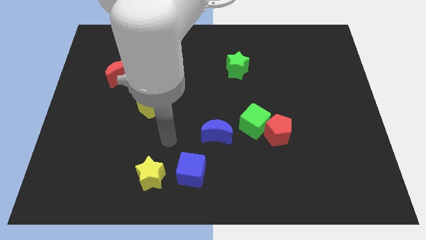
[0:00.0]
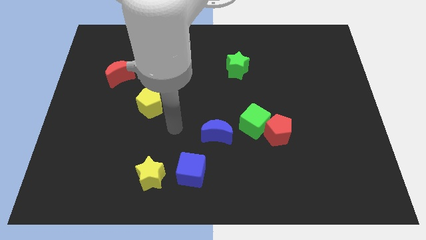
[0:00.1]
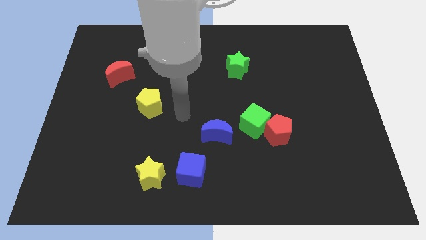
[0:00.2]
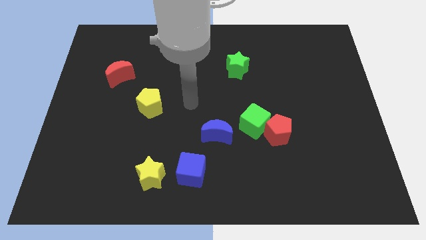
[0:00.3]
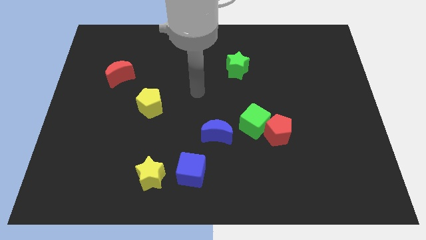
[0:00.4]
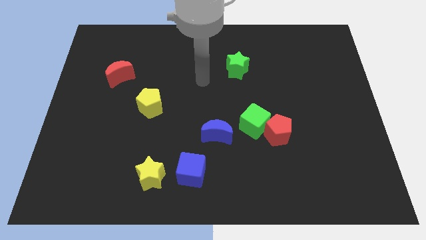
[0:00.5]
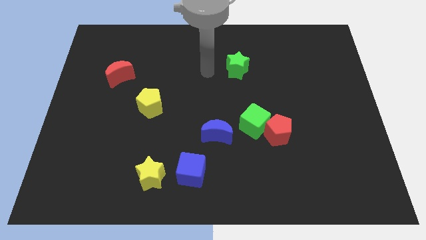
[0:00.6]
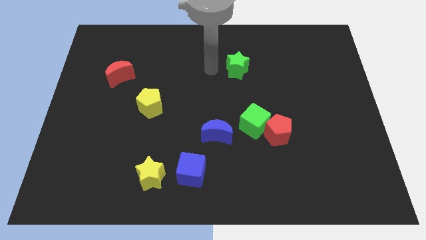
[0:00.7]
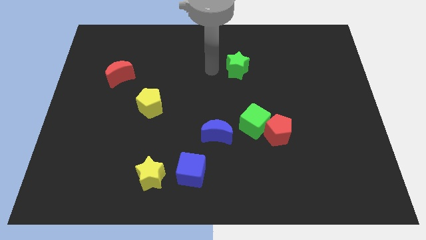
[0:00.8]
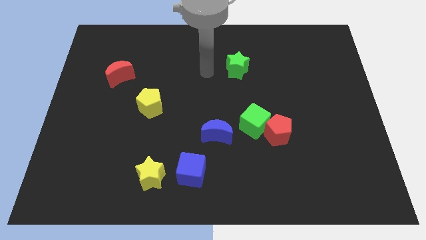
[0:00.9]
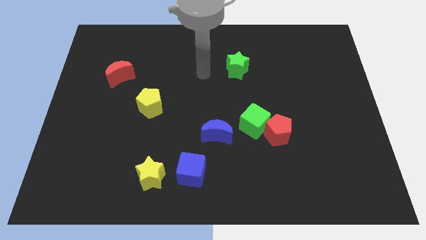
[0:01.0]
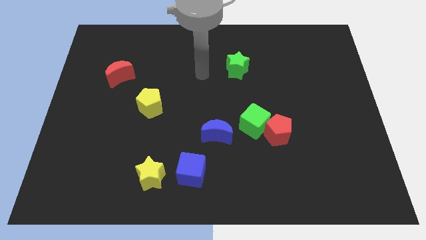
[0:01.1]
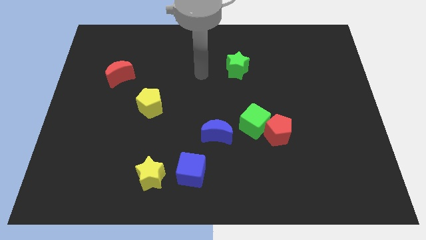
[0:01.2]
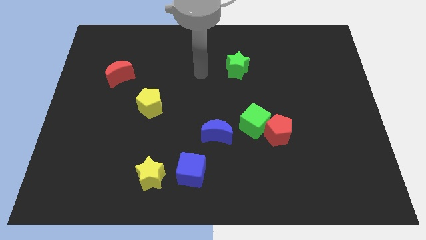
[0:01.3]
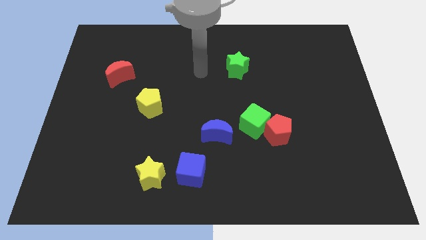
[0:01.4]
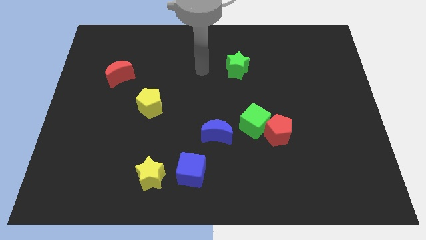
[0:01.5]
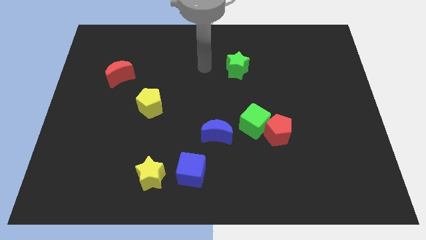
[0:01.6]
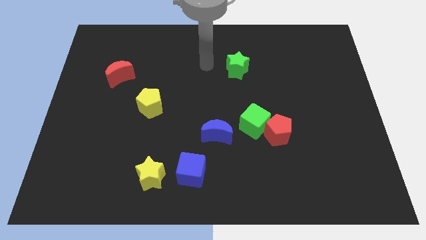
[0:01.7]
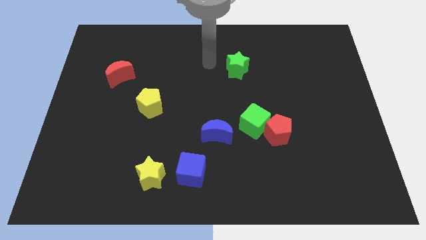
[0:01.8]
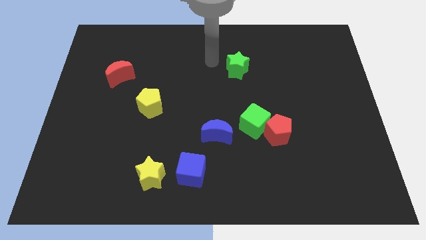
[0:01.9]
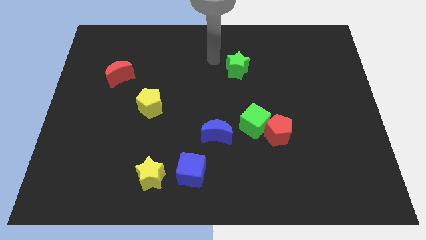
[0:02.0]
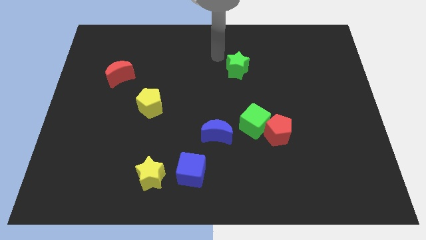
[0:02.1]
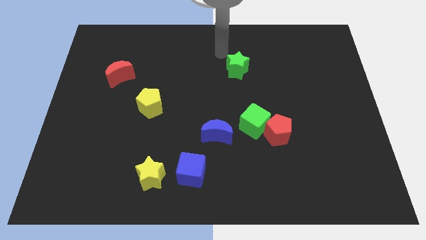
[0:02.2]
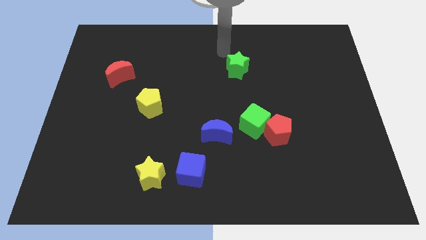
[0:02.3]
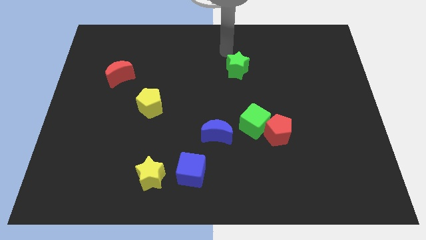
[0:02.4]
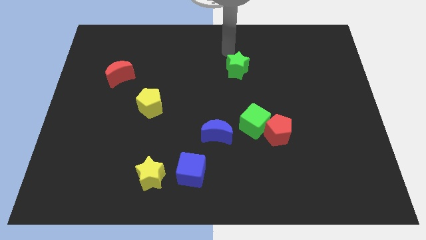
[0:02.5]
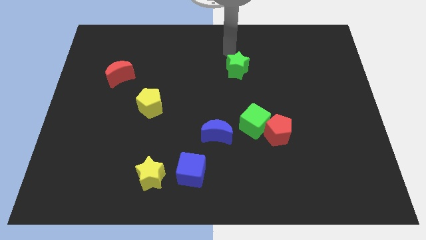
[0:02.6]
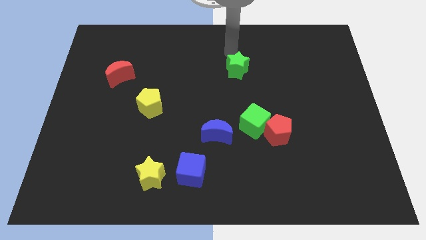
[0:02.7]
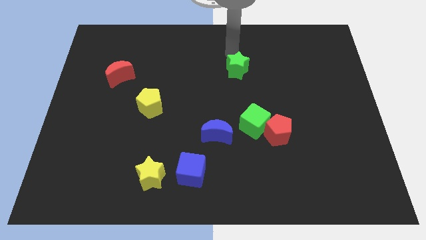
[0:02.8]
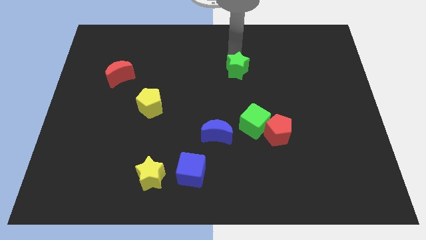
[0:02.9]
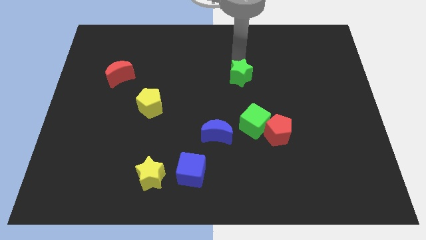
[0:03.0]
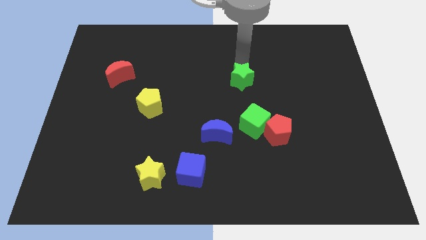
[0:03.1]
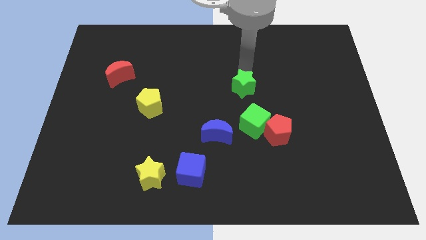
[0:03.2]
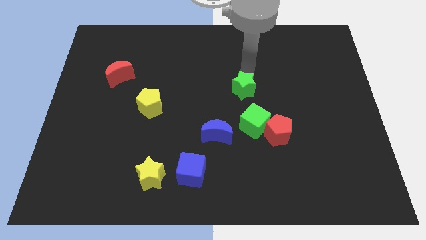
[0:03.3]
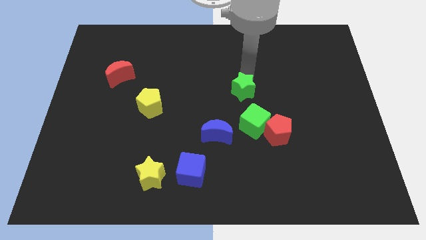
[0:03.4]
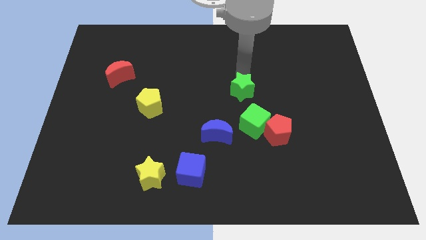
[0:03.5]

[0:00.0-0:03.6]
move the green star slightly down

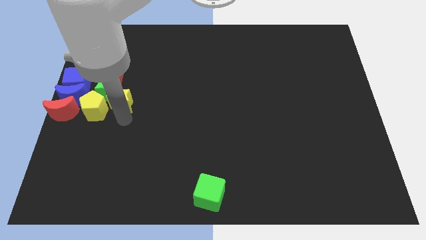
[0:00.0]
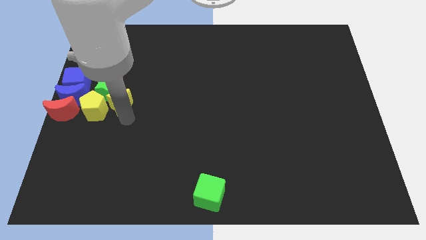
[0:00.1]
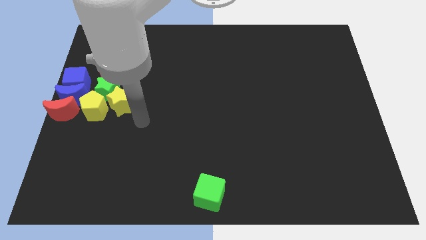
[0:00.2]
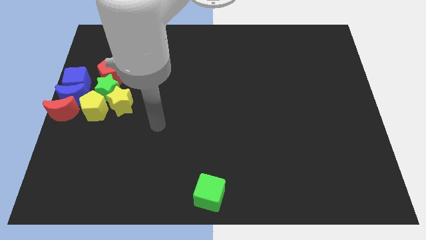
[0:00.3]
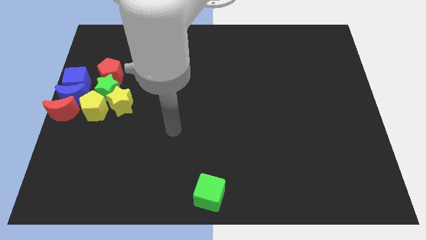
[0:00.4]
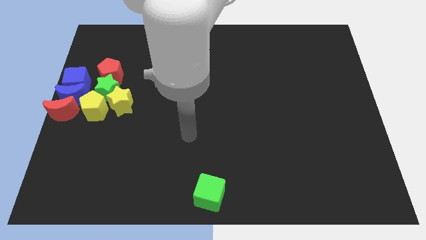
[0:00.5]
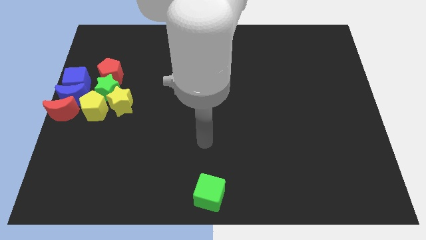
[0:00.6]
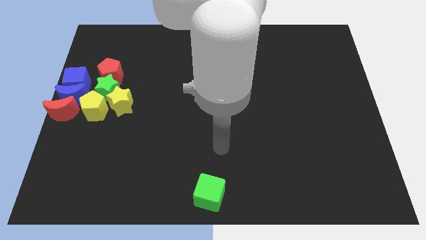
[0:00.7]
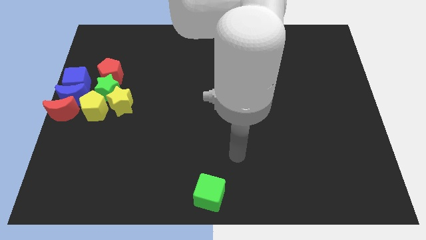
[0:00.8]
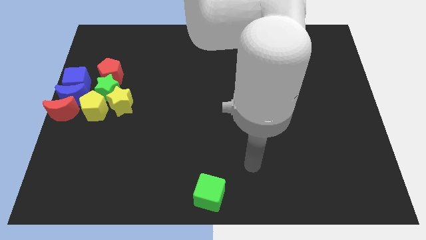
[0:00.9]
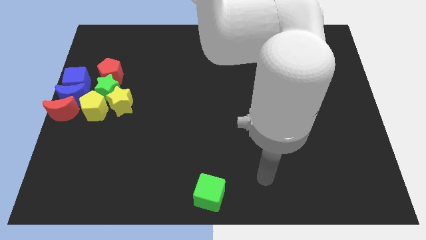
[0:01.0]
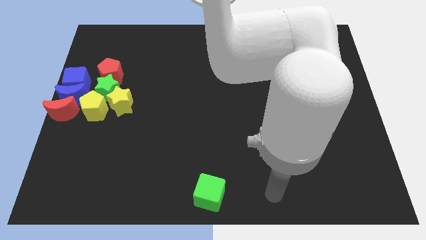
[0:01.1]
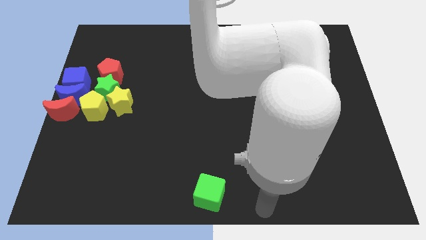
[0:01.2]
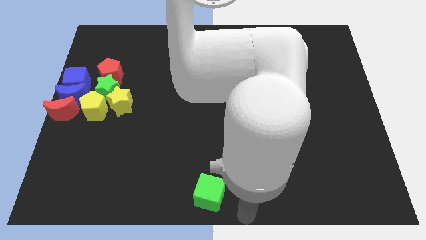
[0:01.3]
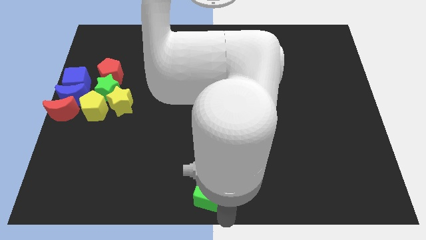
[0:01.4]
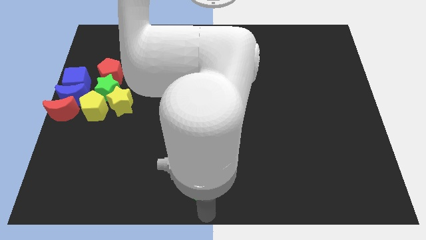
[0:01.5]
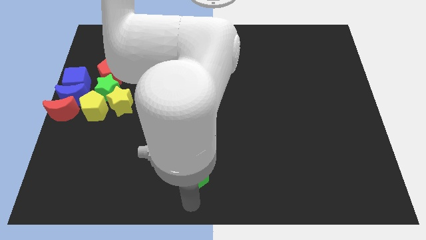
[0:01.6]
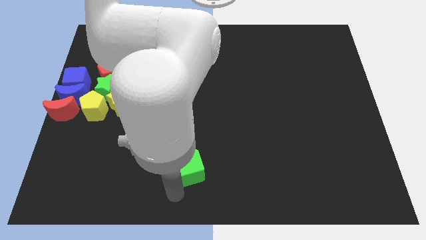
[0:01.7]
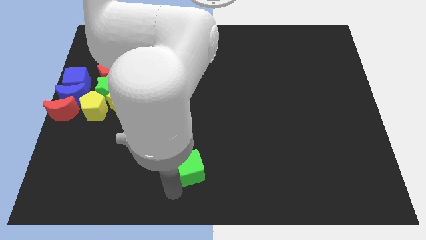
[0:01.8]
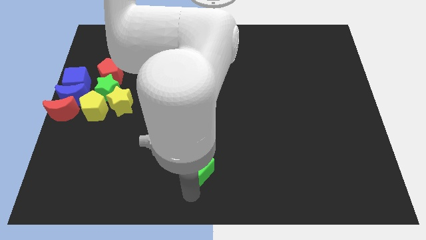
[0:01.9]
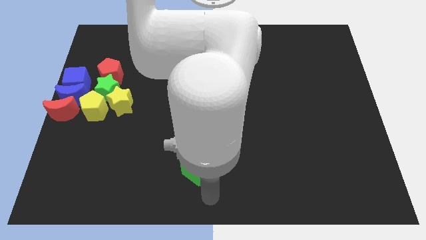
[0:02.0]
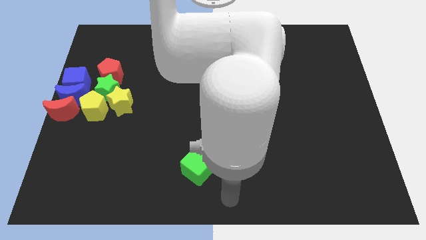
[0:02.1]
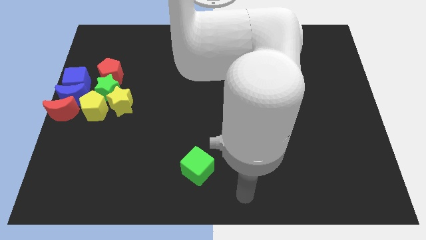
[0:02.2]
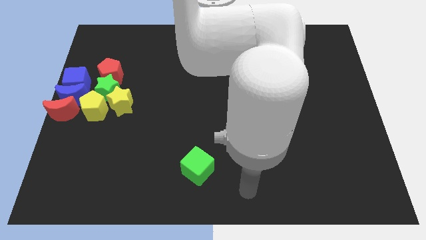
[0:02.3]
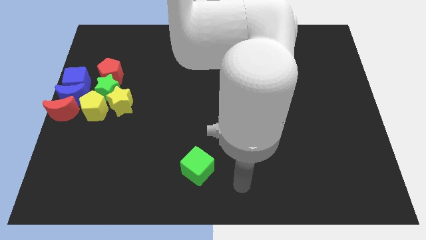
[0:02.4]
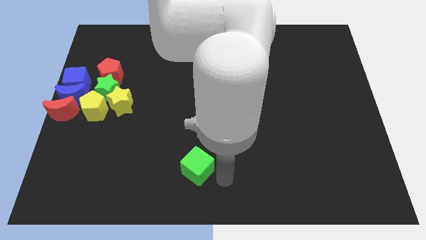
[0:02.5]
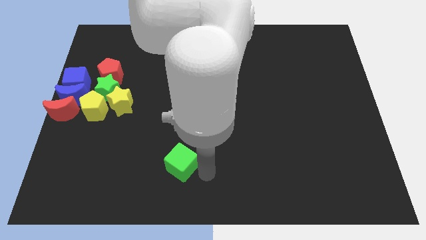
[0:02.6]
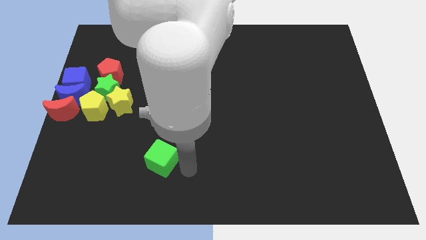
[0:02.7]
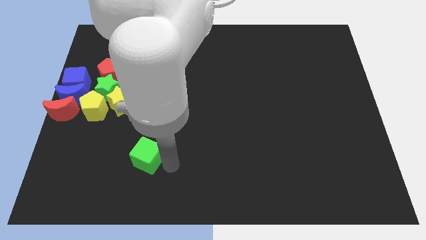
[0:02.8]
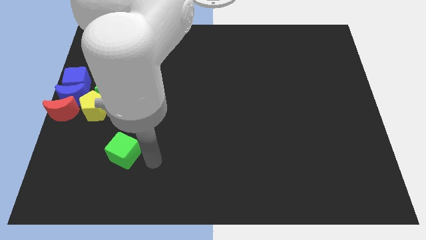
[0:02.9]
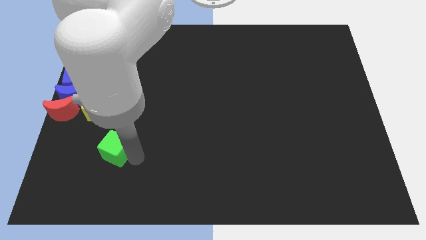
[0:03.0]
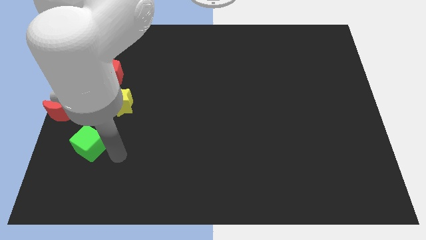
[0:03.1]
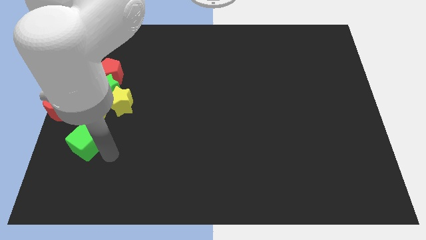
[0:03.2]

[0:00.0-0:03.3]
put the green cube below the yellow pentagon

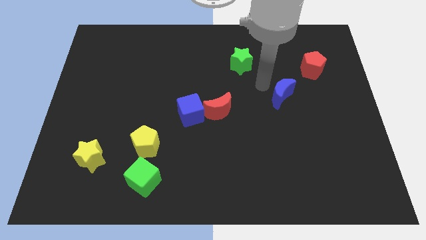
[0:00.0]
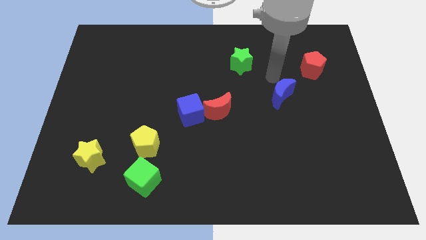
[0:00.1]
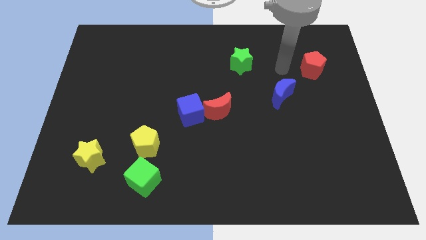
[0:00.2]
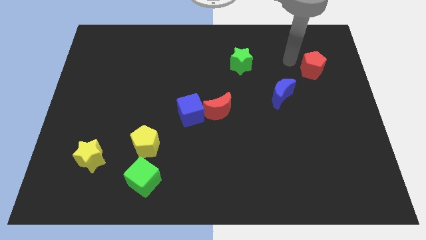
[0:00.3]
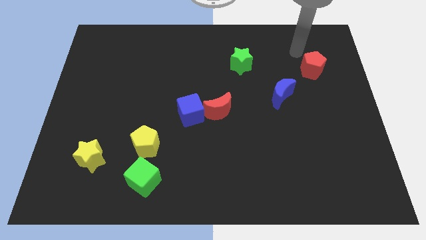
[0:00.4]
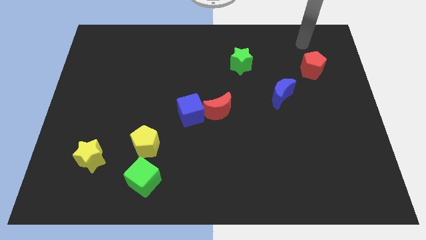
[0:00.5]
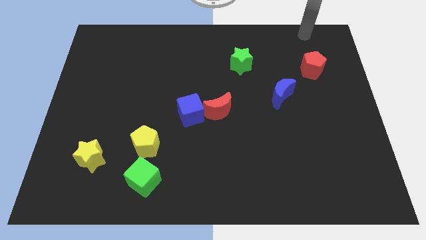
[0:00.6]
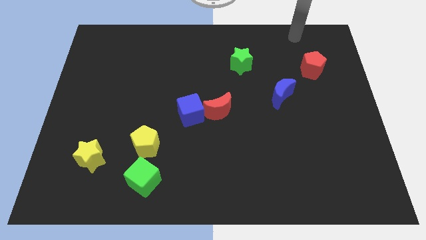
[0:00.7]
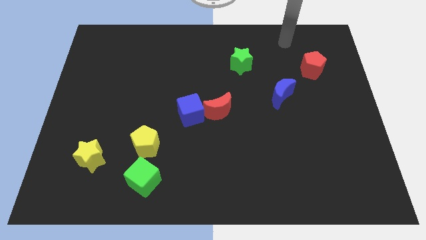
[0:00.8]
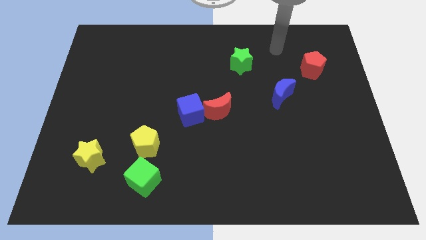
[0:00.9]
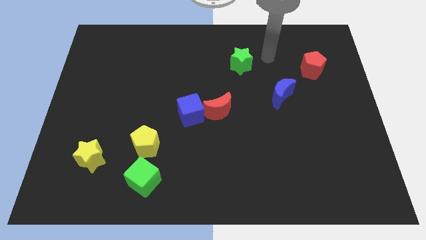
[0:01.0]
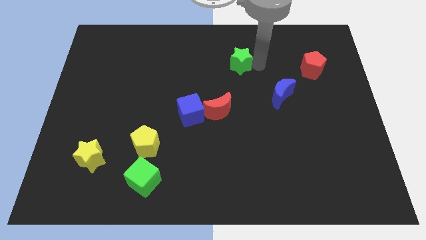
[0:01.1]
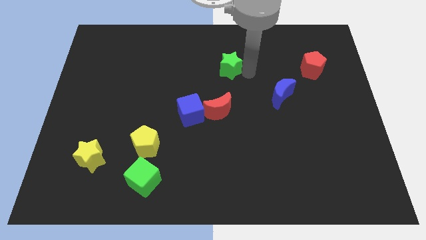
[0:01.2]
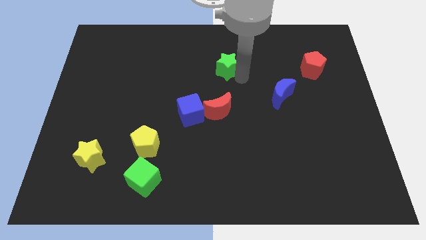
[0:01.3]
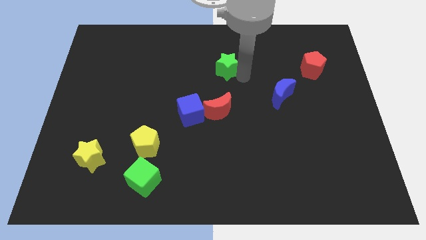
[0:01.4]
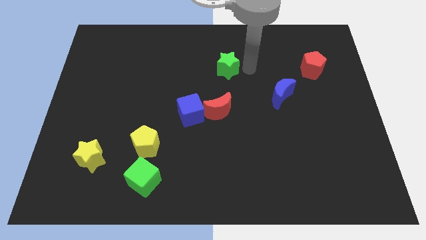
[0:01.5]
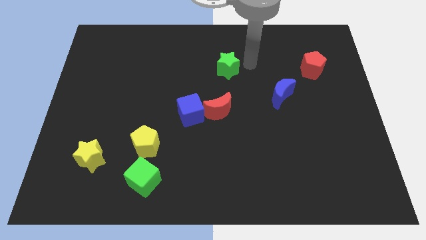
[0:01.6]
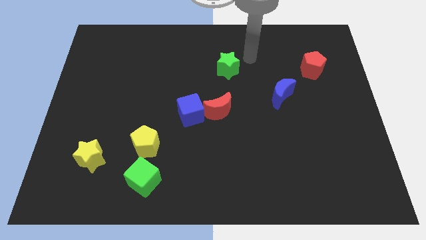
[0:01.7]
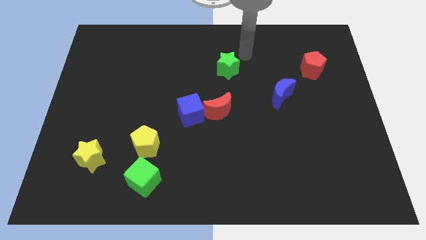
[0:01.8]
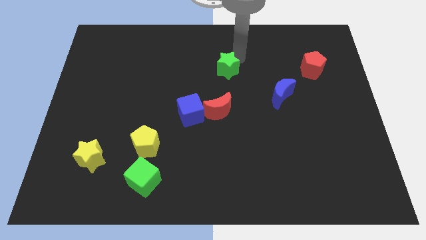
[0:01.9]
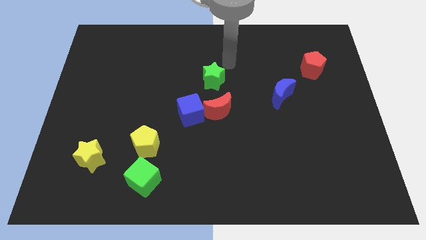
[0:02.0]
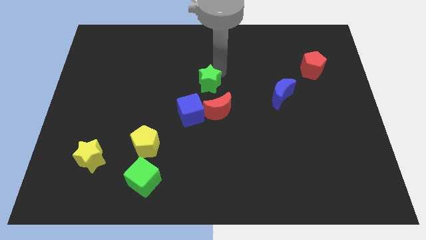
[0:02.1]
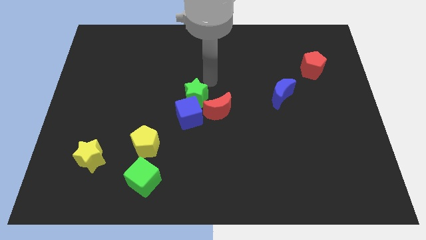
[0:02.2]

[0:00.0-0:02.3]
move the green star to the center of the board
